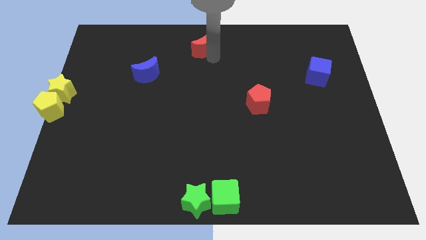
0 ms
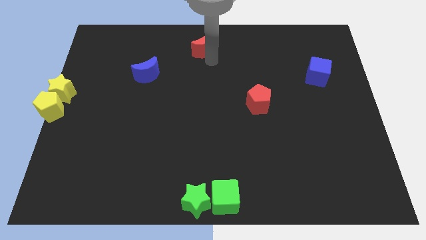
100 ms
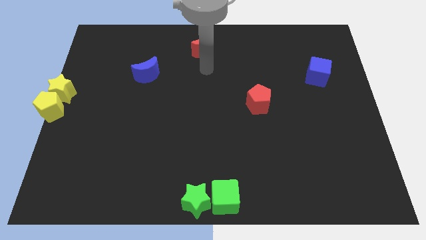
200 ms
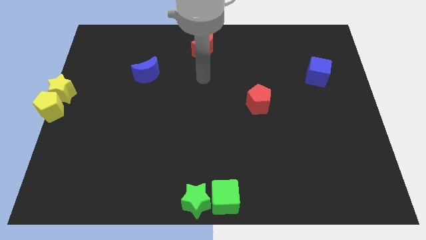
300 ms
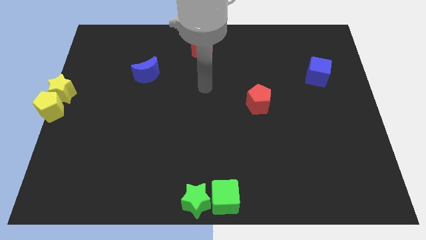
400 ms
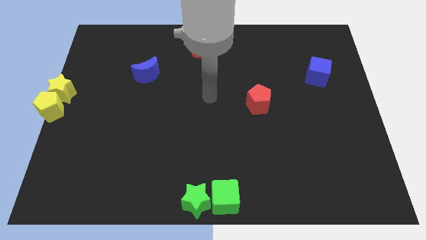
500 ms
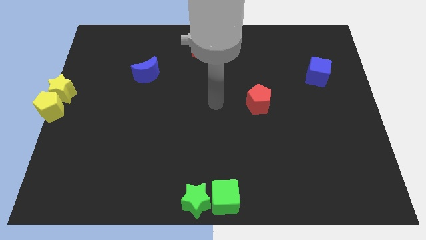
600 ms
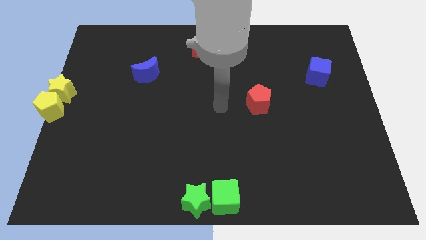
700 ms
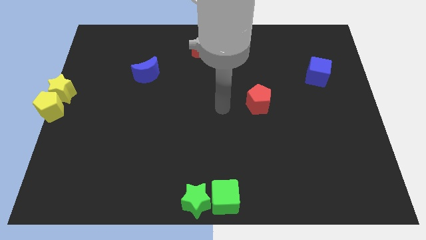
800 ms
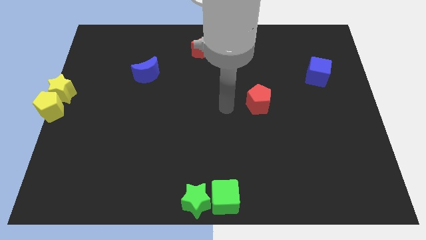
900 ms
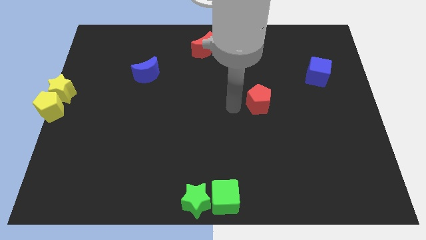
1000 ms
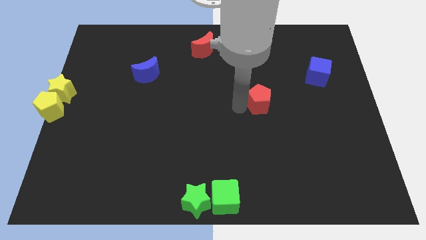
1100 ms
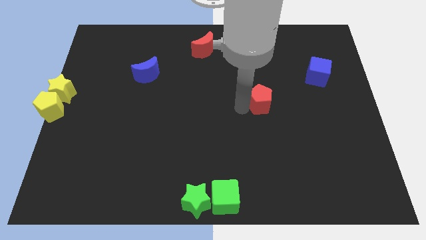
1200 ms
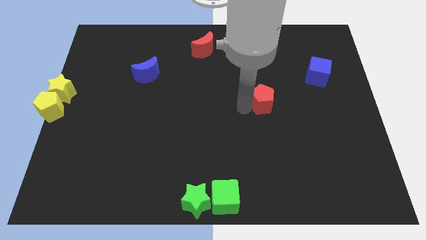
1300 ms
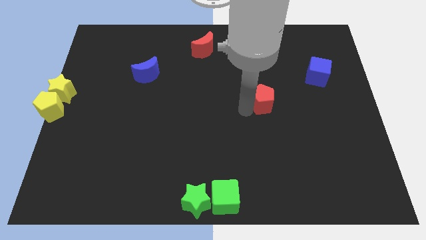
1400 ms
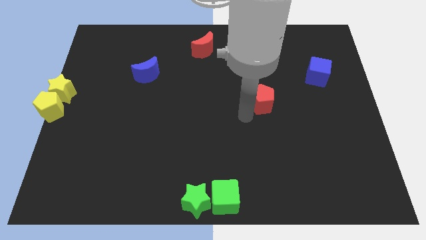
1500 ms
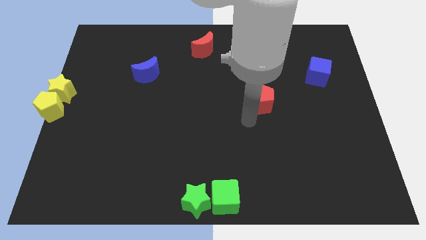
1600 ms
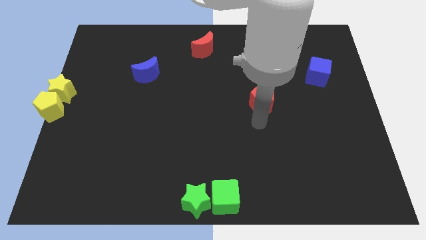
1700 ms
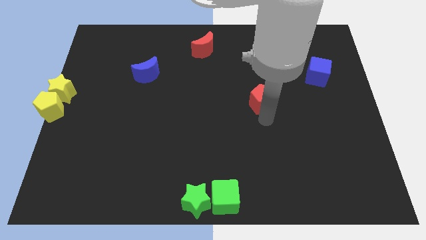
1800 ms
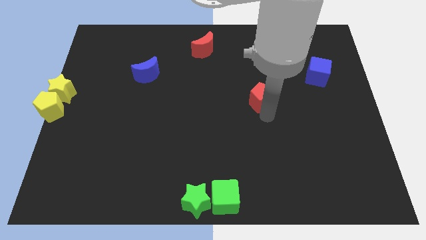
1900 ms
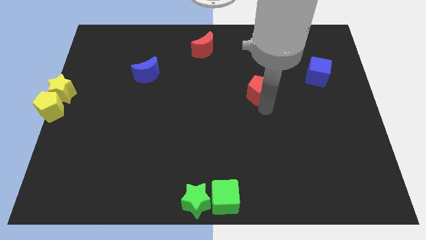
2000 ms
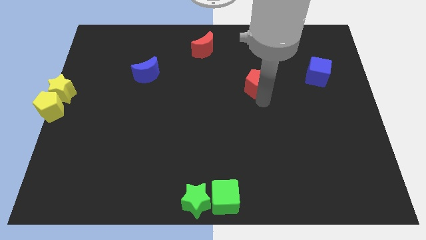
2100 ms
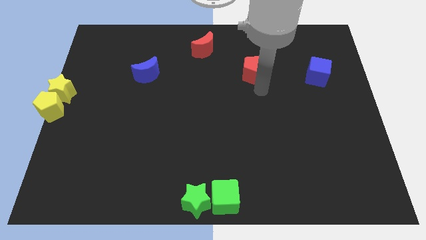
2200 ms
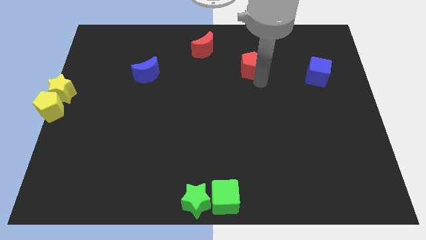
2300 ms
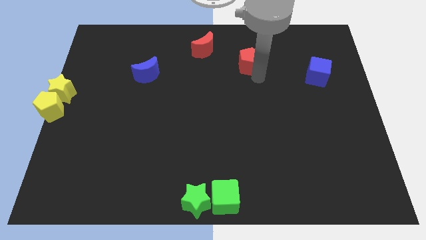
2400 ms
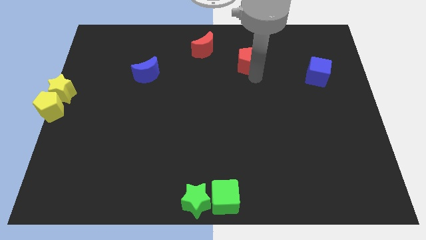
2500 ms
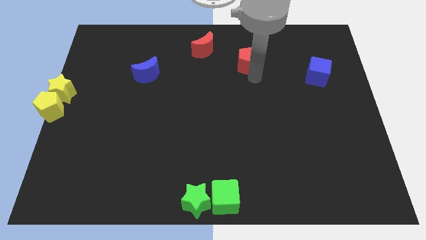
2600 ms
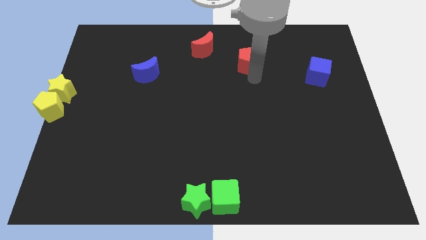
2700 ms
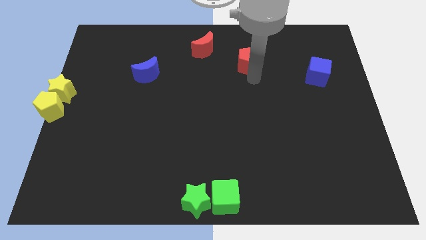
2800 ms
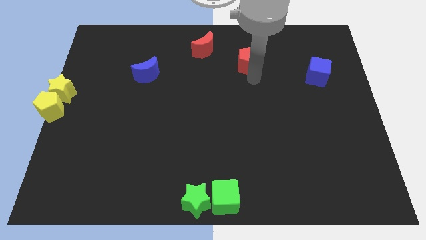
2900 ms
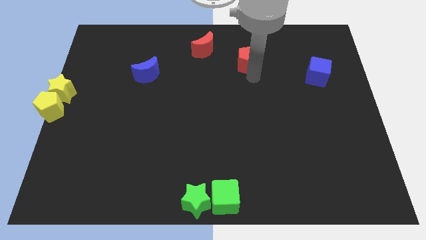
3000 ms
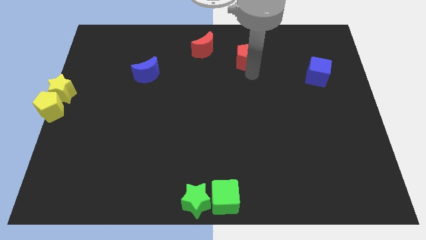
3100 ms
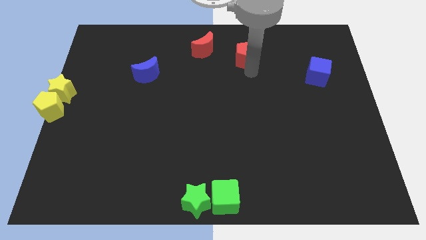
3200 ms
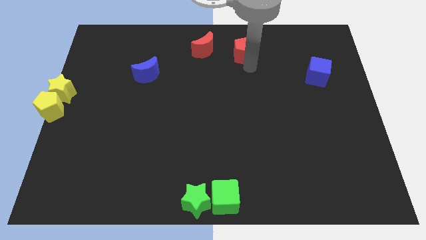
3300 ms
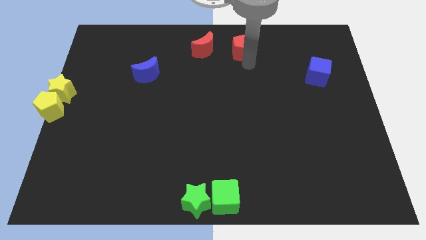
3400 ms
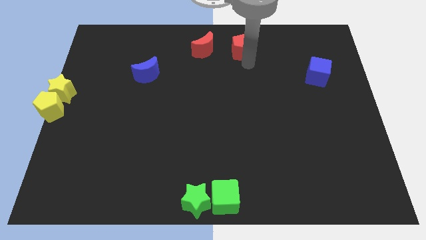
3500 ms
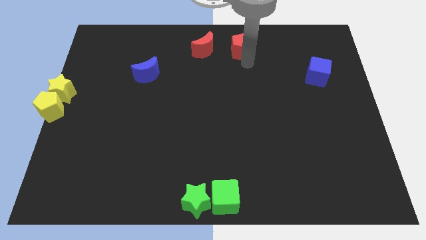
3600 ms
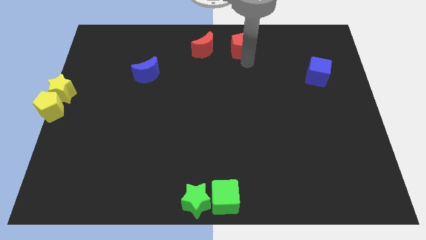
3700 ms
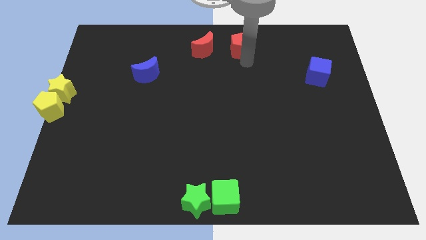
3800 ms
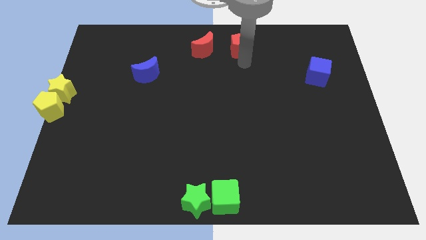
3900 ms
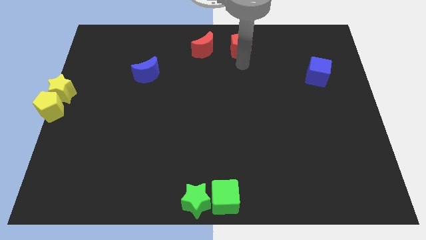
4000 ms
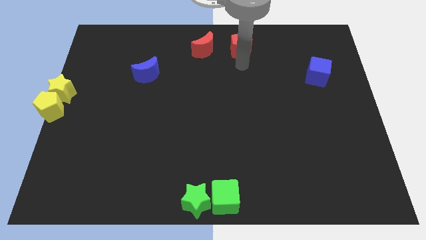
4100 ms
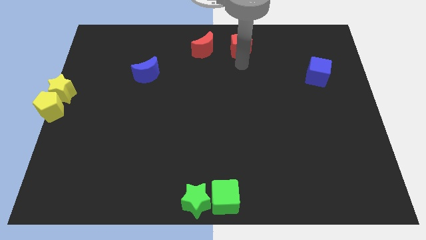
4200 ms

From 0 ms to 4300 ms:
put the red pentagon at the right side of the red crescent

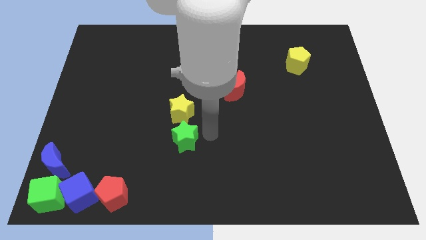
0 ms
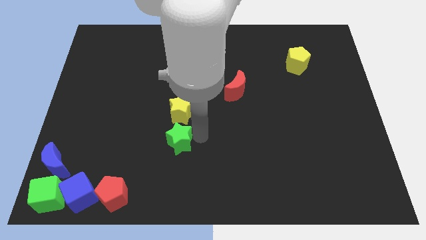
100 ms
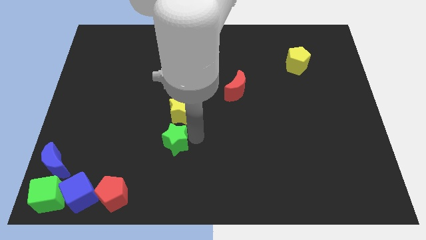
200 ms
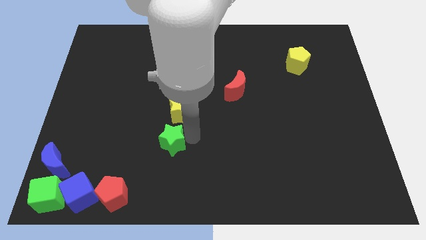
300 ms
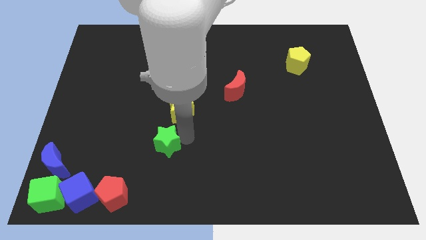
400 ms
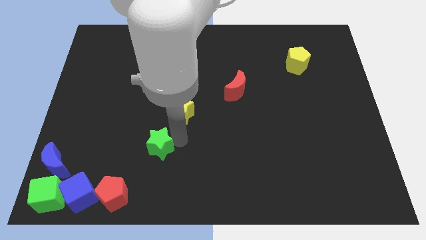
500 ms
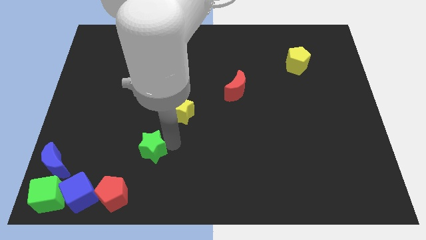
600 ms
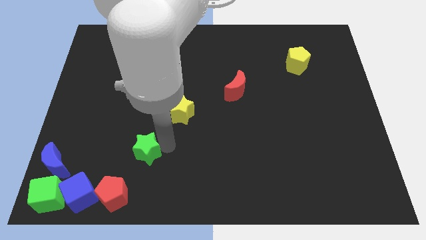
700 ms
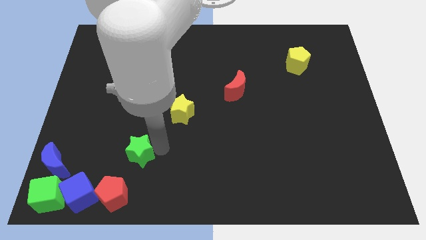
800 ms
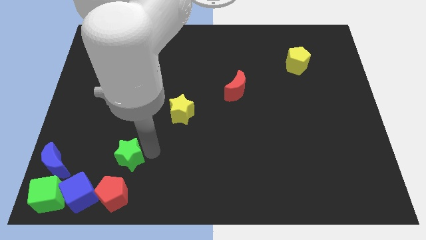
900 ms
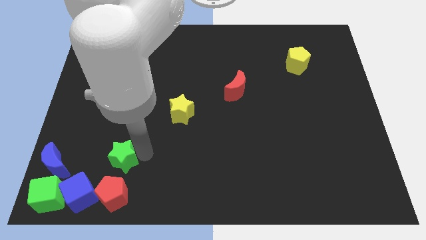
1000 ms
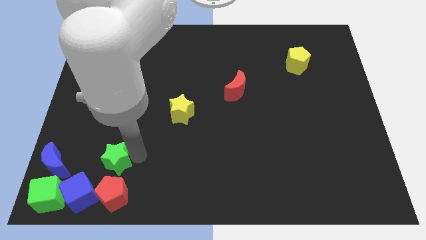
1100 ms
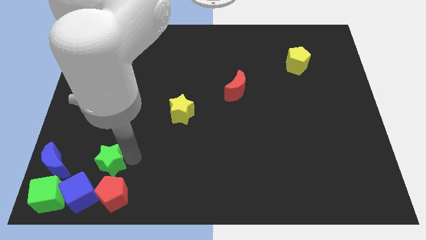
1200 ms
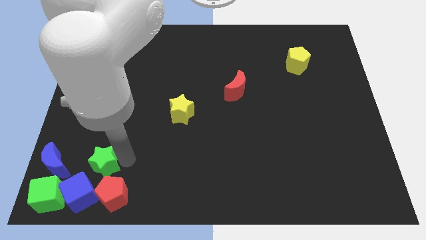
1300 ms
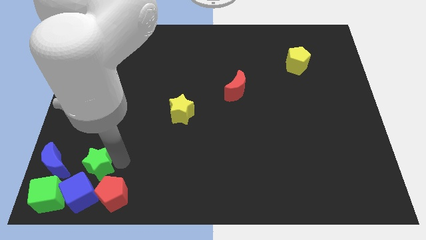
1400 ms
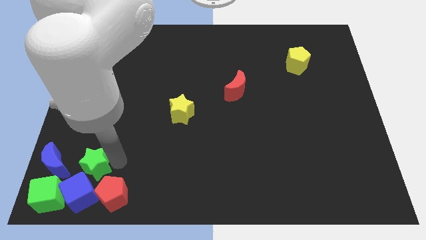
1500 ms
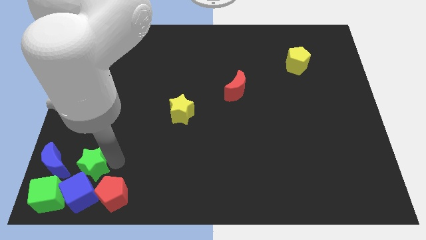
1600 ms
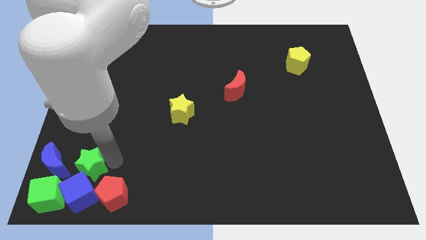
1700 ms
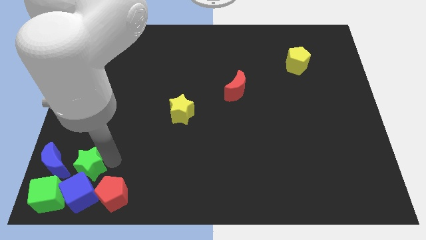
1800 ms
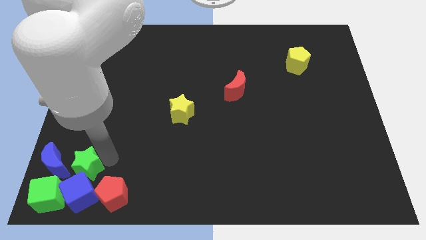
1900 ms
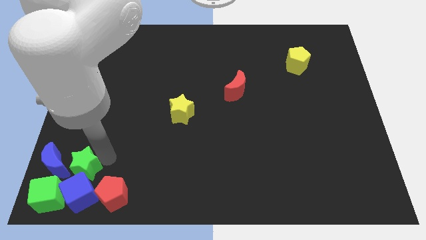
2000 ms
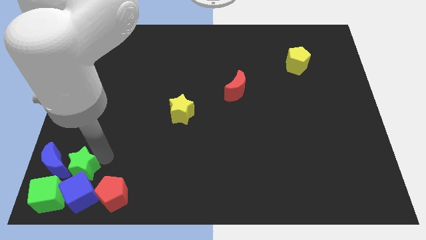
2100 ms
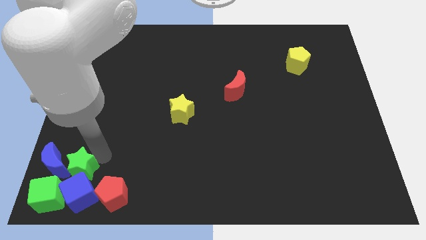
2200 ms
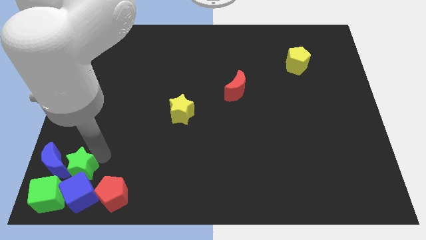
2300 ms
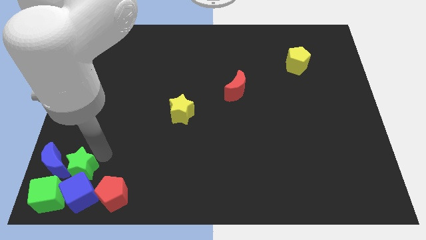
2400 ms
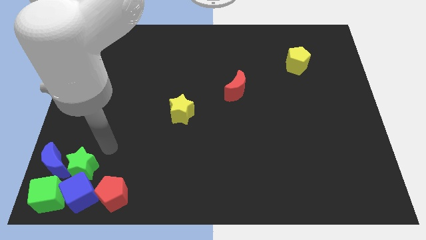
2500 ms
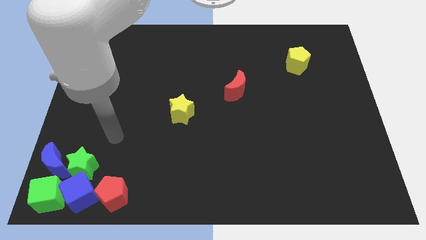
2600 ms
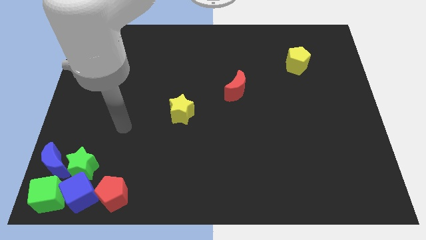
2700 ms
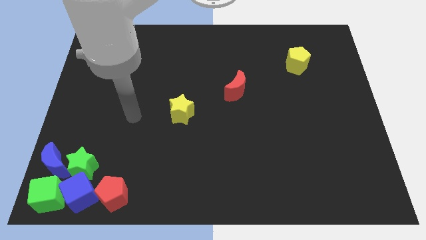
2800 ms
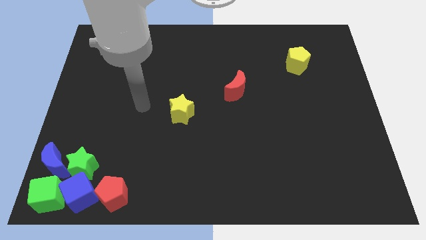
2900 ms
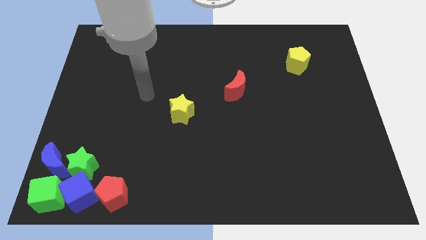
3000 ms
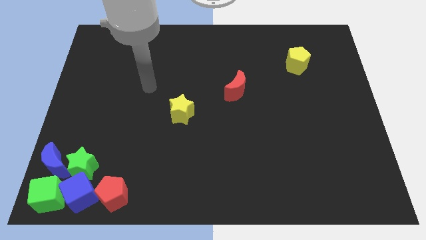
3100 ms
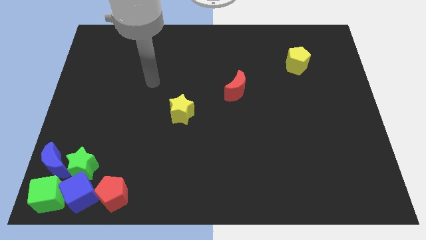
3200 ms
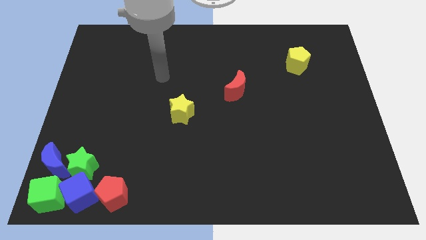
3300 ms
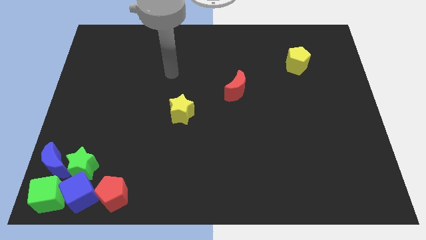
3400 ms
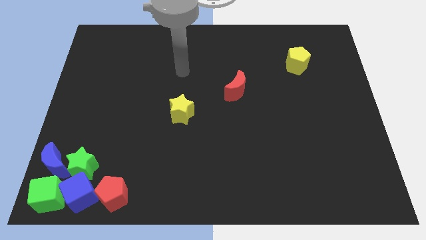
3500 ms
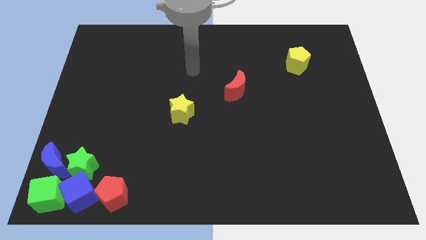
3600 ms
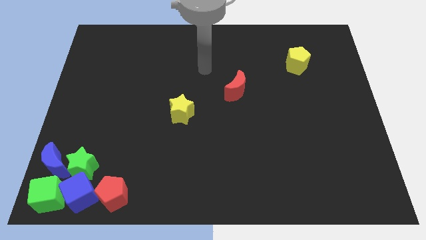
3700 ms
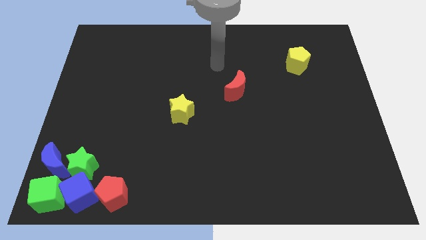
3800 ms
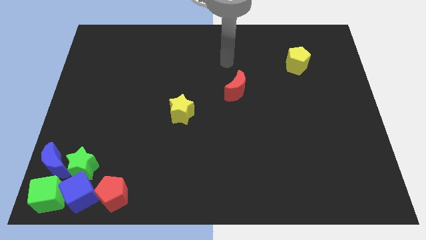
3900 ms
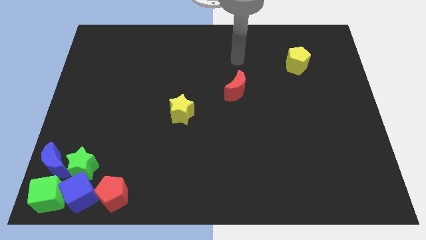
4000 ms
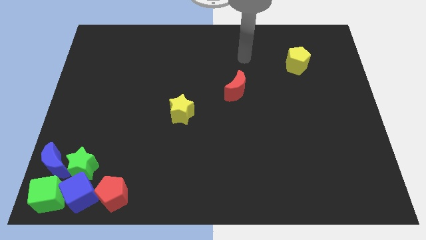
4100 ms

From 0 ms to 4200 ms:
put the green star right to the blue moon

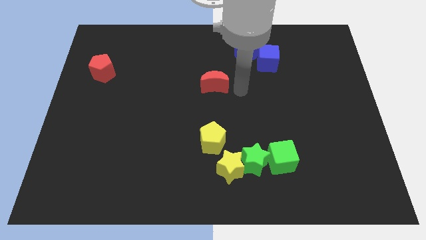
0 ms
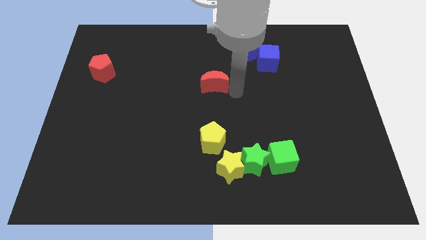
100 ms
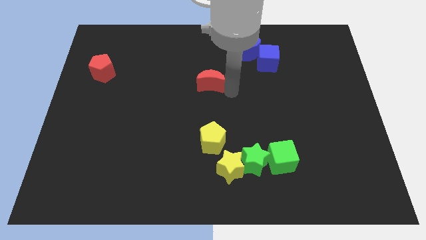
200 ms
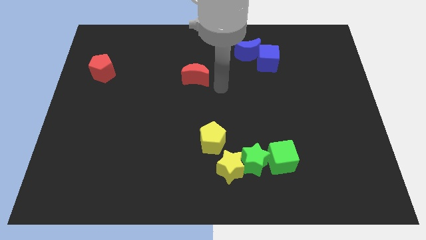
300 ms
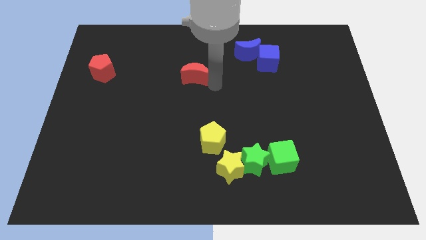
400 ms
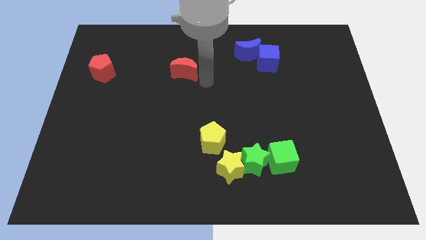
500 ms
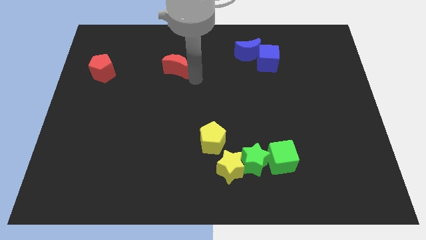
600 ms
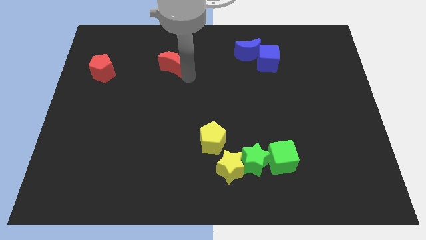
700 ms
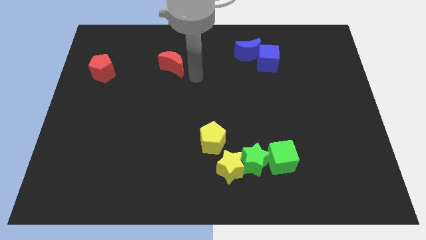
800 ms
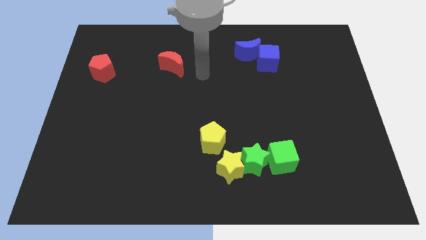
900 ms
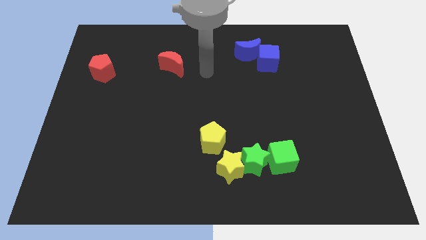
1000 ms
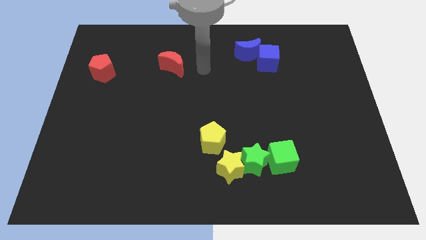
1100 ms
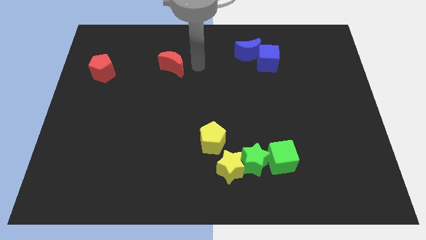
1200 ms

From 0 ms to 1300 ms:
push red crescent slightly towards left
